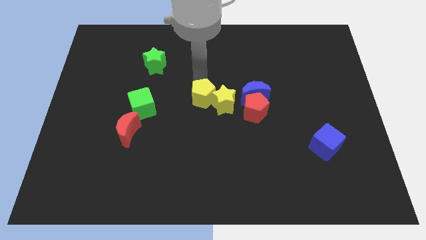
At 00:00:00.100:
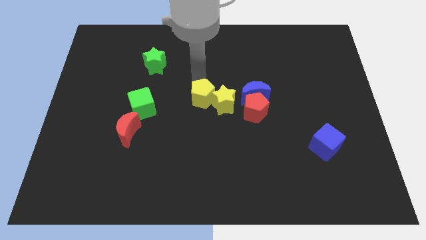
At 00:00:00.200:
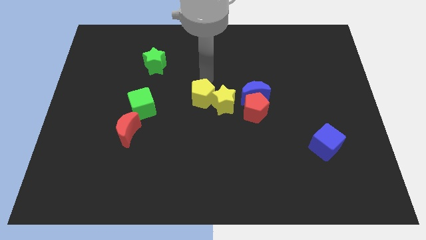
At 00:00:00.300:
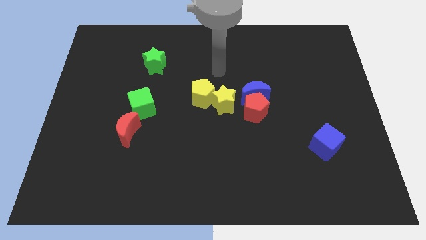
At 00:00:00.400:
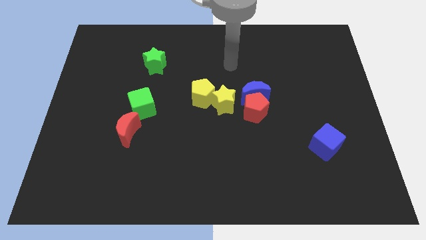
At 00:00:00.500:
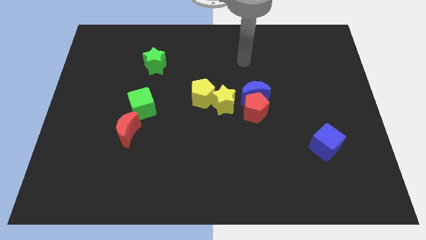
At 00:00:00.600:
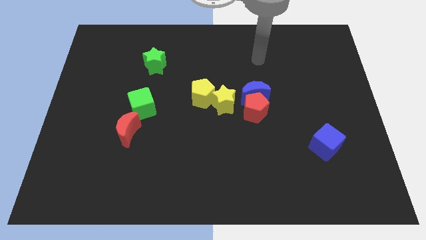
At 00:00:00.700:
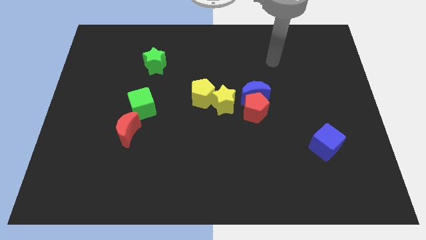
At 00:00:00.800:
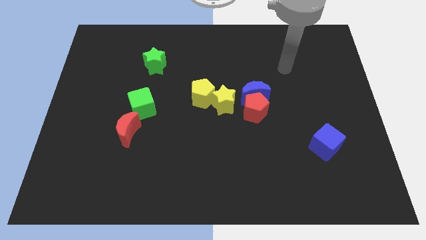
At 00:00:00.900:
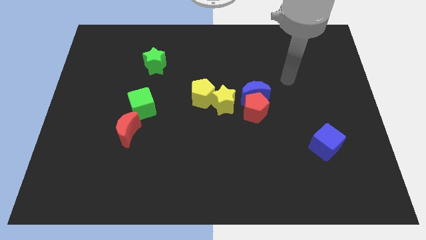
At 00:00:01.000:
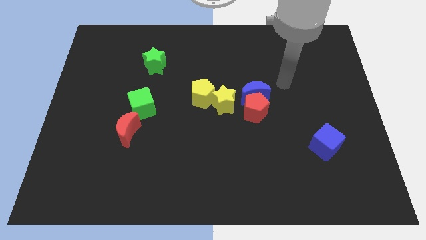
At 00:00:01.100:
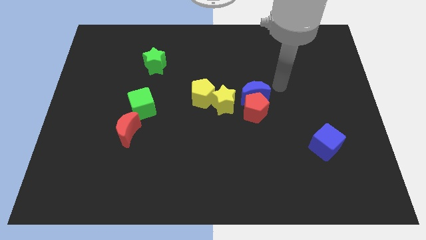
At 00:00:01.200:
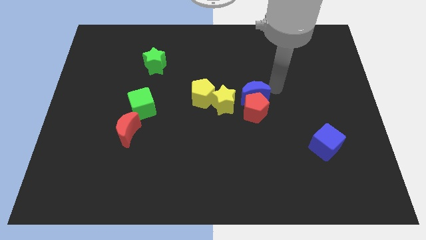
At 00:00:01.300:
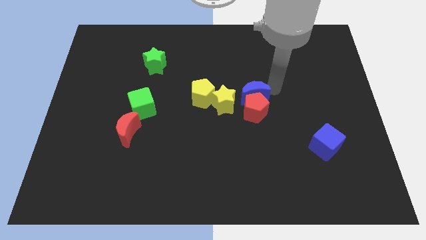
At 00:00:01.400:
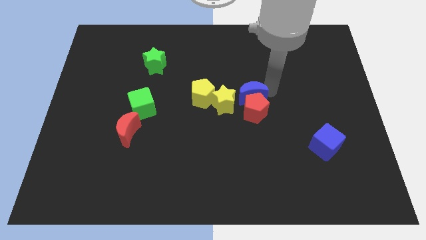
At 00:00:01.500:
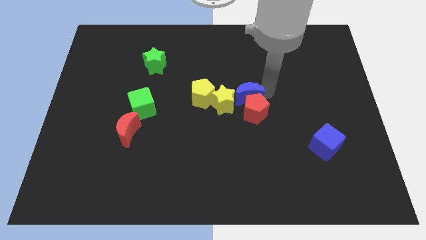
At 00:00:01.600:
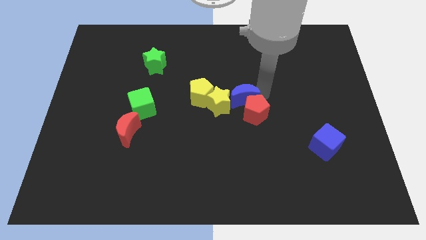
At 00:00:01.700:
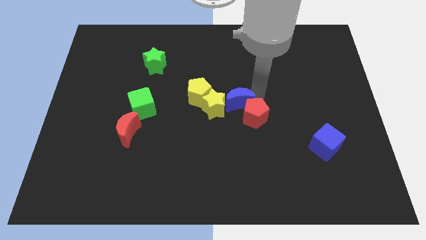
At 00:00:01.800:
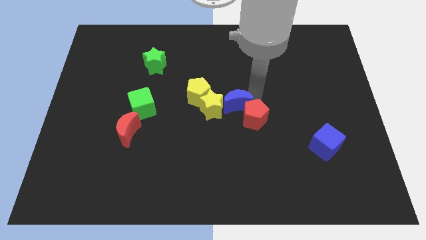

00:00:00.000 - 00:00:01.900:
push the blue crescent in between the red pentagon and the yellow star

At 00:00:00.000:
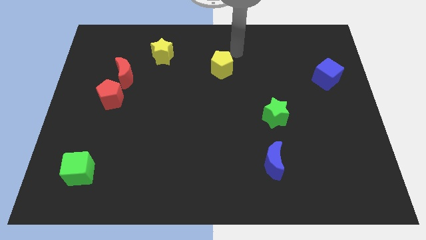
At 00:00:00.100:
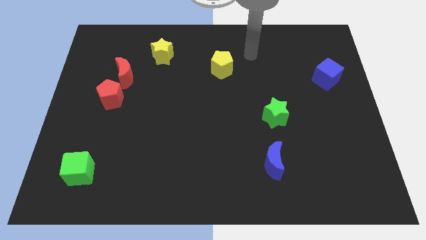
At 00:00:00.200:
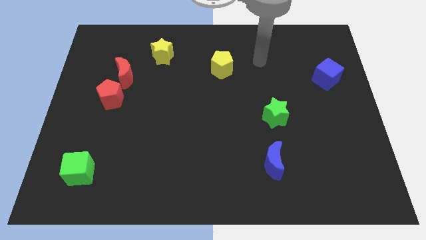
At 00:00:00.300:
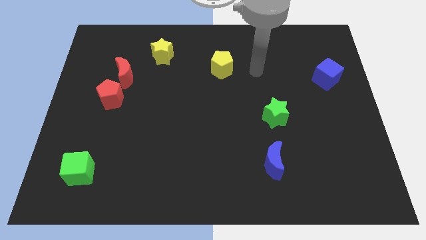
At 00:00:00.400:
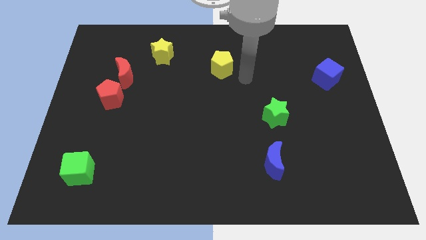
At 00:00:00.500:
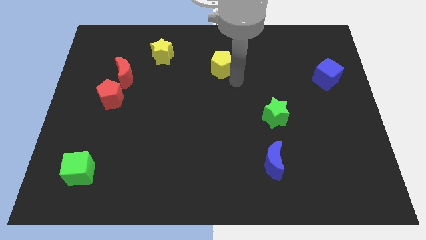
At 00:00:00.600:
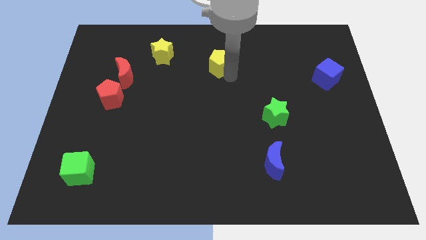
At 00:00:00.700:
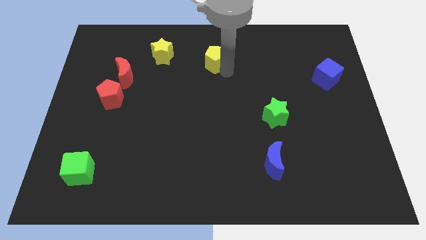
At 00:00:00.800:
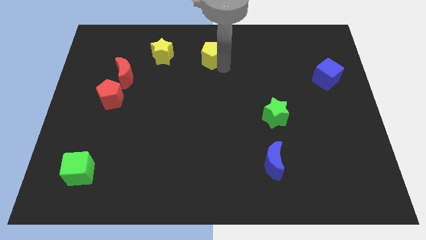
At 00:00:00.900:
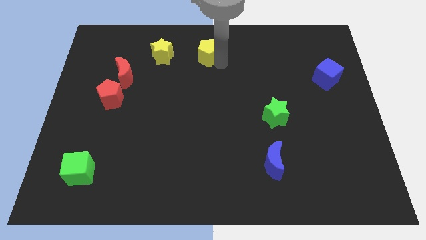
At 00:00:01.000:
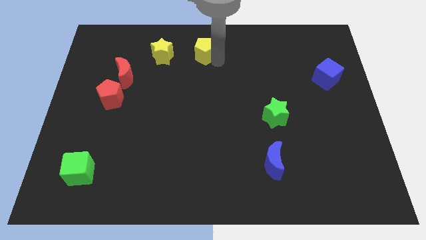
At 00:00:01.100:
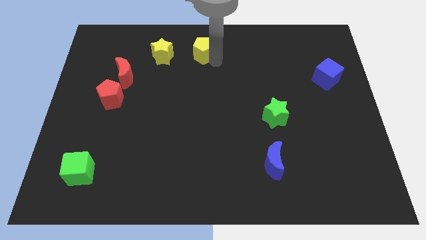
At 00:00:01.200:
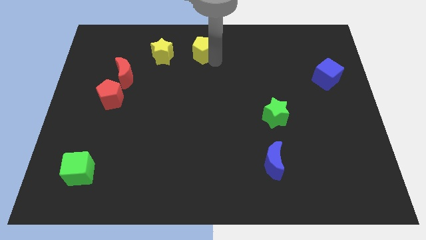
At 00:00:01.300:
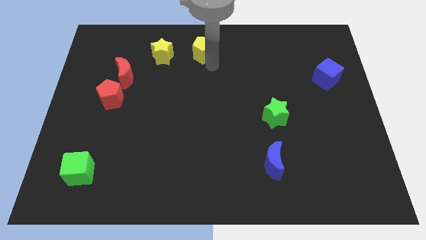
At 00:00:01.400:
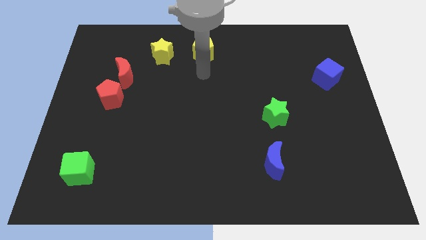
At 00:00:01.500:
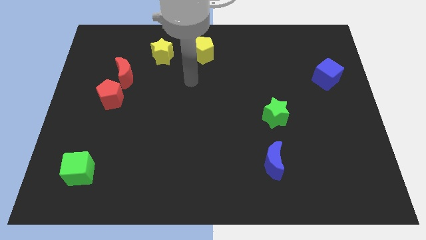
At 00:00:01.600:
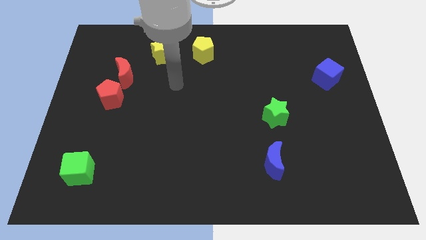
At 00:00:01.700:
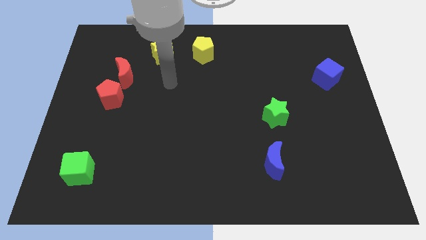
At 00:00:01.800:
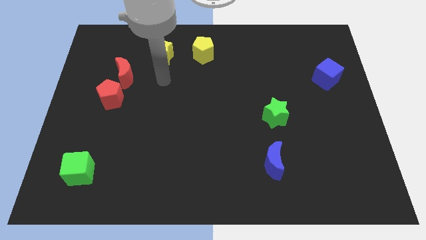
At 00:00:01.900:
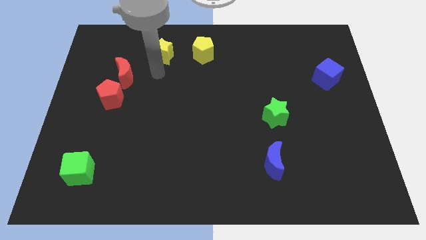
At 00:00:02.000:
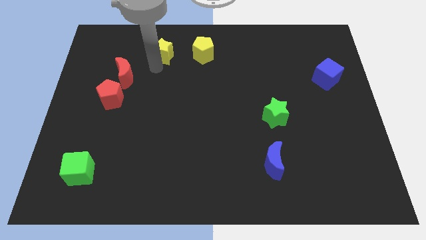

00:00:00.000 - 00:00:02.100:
place yellow pentagon adjacent to yellow star

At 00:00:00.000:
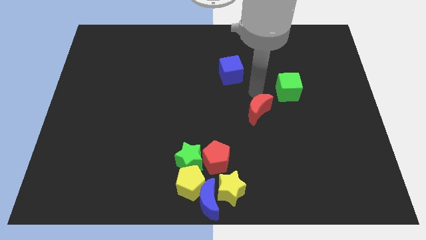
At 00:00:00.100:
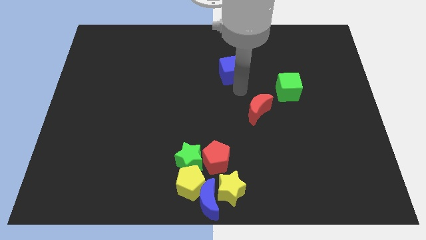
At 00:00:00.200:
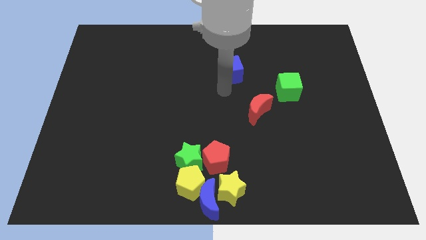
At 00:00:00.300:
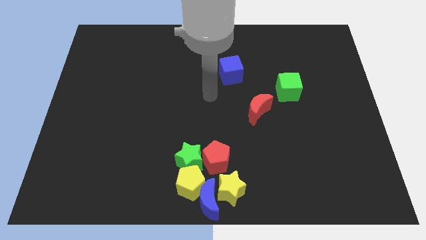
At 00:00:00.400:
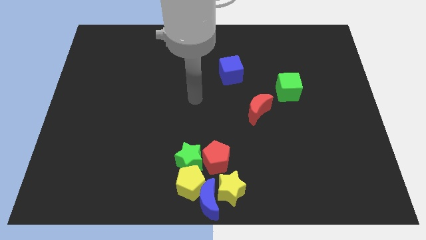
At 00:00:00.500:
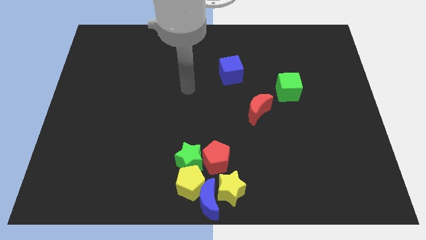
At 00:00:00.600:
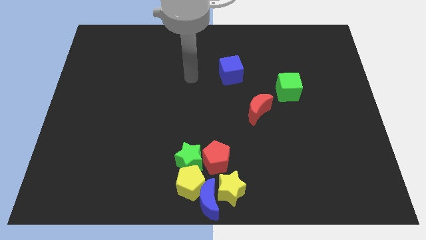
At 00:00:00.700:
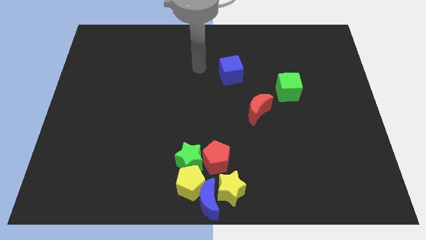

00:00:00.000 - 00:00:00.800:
place your arm to the left side of blue cube

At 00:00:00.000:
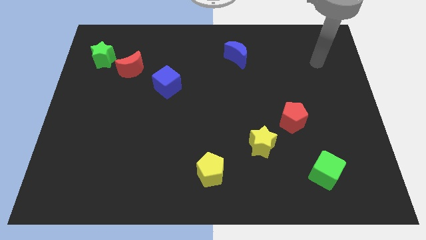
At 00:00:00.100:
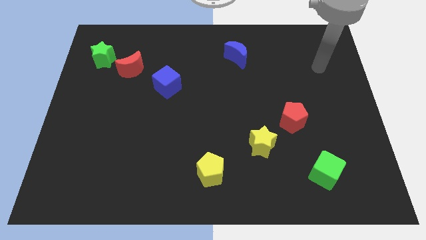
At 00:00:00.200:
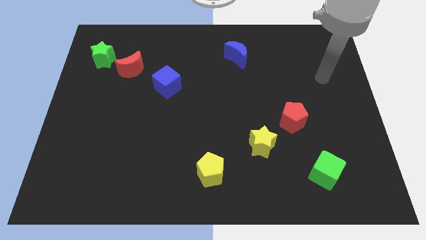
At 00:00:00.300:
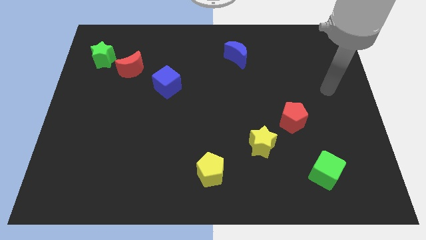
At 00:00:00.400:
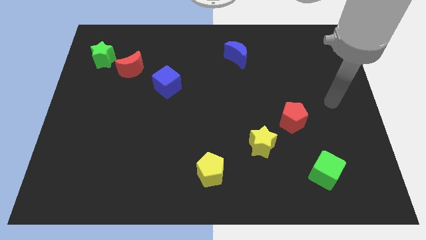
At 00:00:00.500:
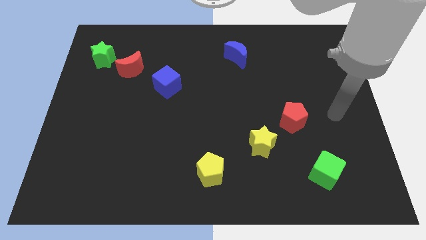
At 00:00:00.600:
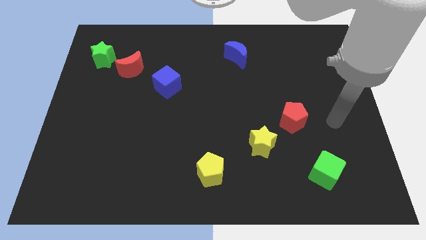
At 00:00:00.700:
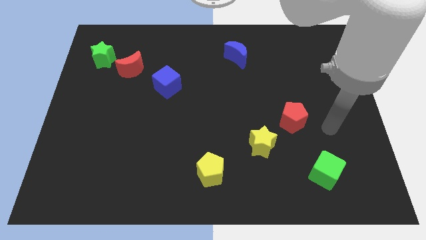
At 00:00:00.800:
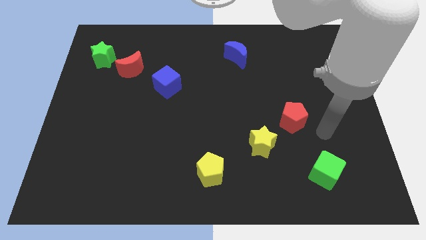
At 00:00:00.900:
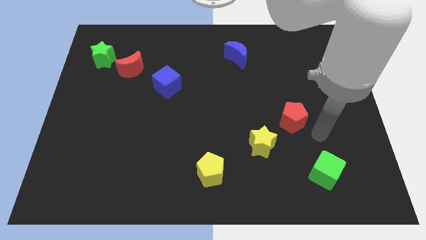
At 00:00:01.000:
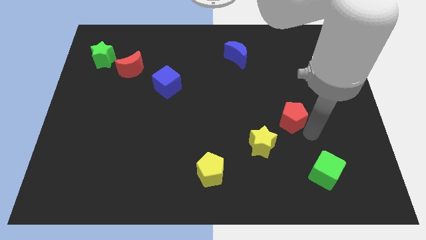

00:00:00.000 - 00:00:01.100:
point your hand at the bottom right side of the red pentagon

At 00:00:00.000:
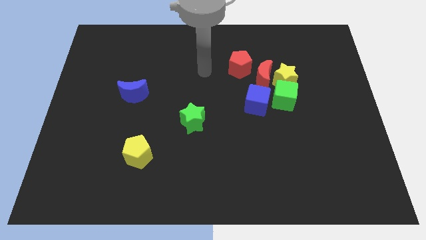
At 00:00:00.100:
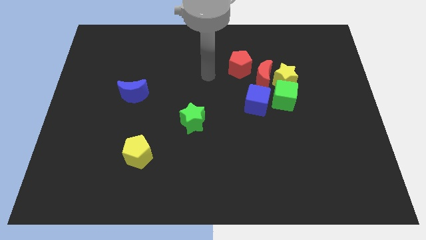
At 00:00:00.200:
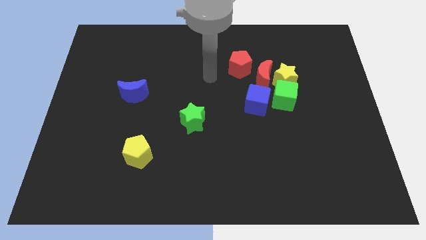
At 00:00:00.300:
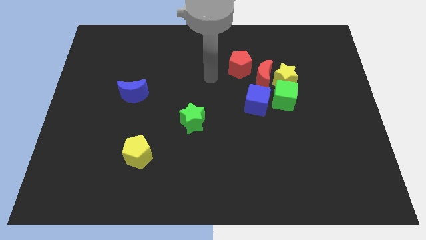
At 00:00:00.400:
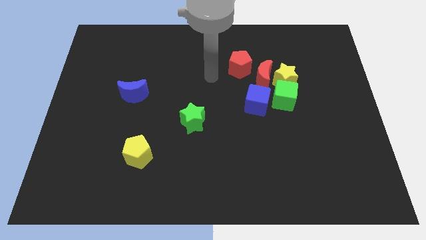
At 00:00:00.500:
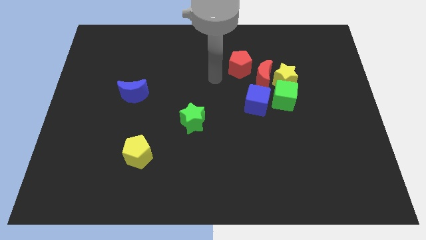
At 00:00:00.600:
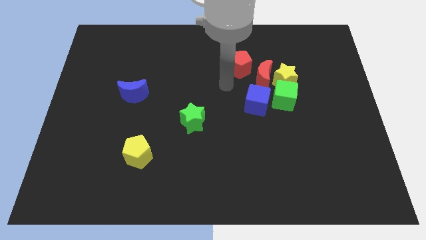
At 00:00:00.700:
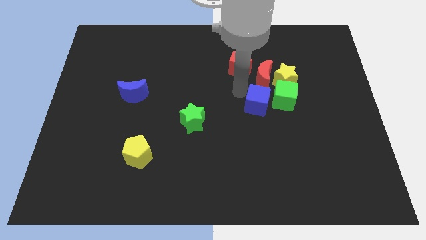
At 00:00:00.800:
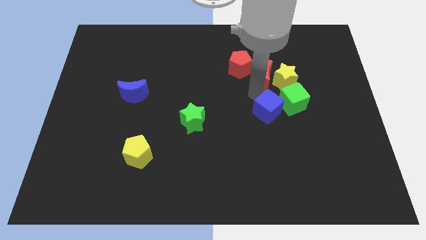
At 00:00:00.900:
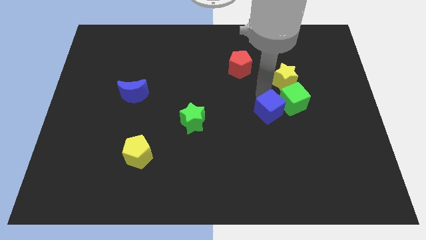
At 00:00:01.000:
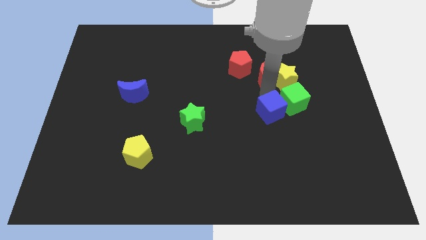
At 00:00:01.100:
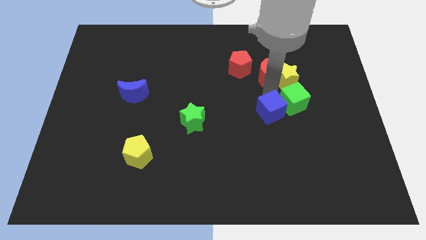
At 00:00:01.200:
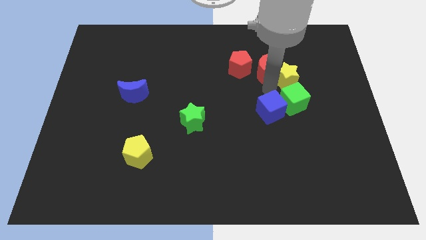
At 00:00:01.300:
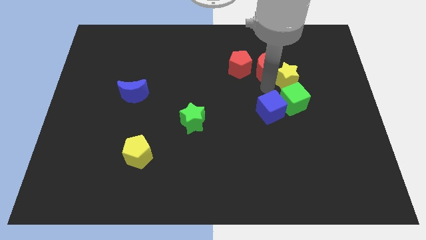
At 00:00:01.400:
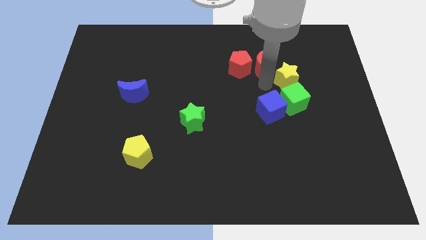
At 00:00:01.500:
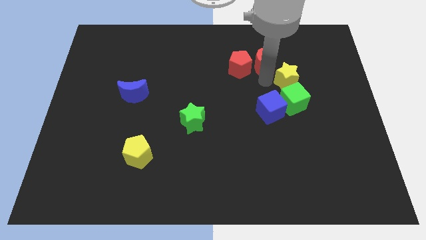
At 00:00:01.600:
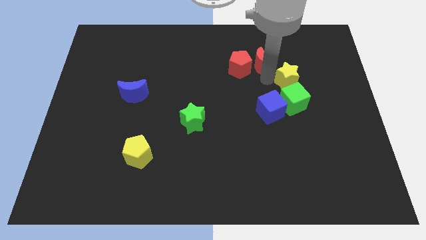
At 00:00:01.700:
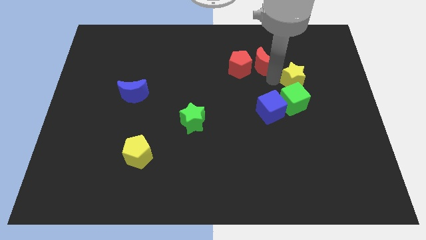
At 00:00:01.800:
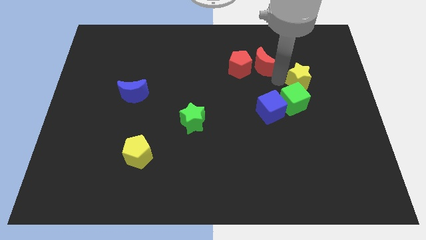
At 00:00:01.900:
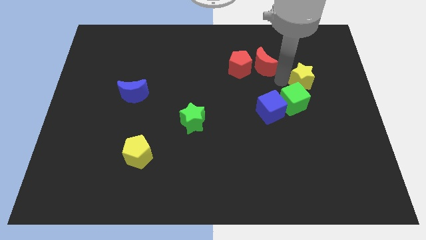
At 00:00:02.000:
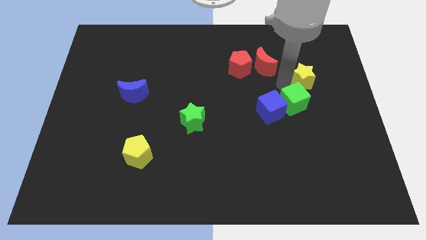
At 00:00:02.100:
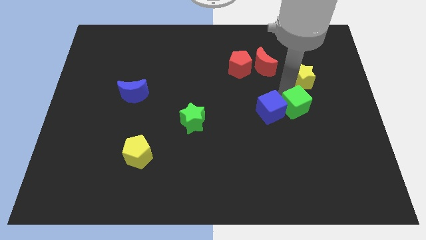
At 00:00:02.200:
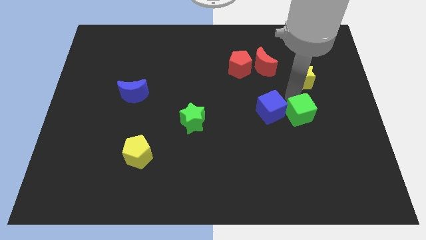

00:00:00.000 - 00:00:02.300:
move green cube slightly down

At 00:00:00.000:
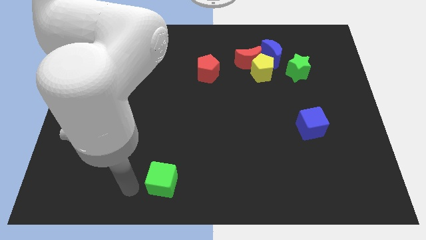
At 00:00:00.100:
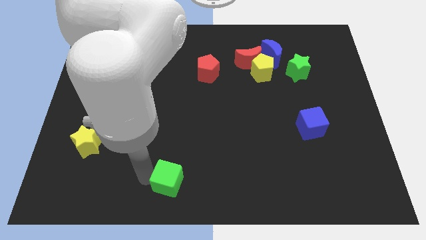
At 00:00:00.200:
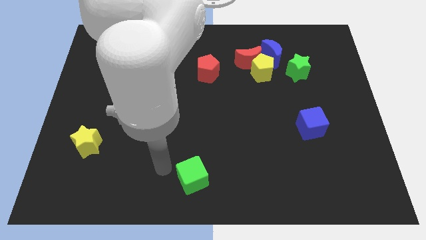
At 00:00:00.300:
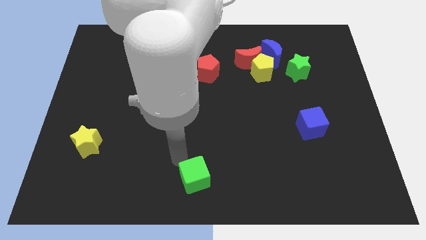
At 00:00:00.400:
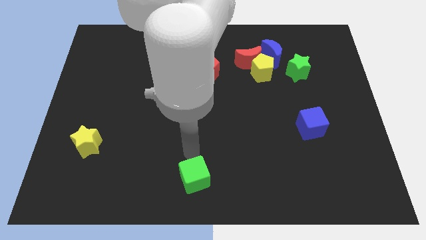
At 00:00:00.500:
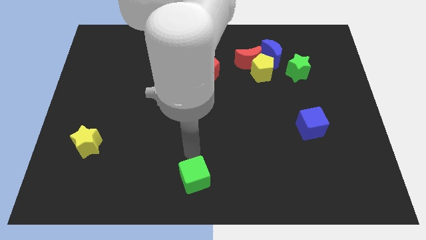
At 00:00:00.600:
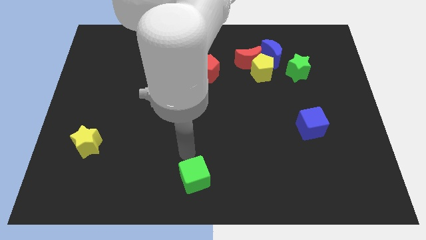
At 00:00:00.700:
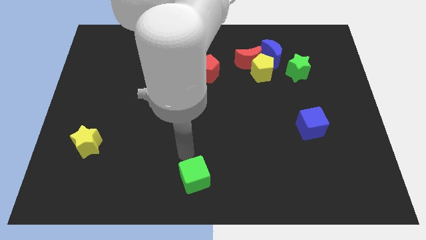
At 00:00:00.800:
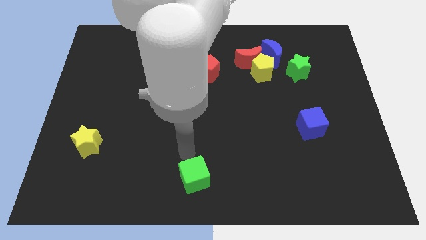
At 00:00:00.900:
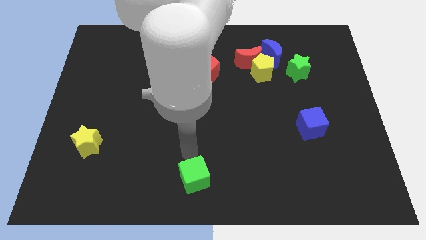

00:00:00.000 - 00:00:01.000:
move the green cube to the bottom centre of the board
